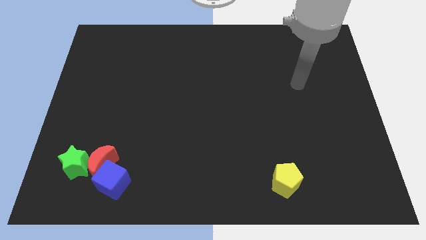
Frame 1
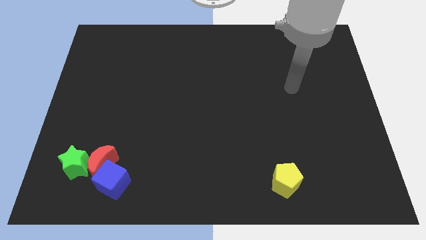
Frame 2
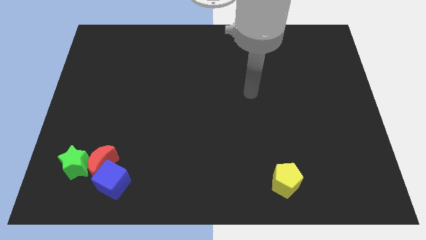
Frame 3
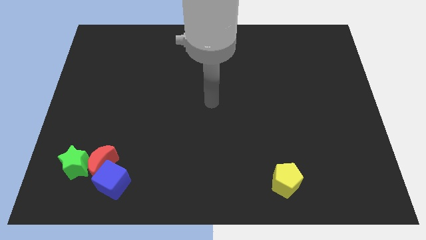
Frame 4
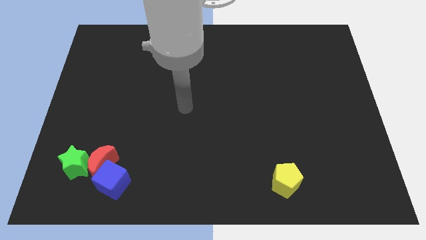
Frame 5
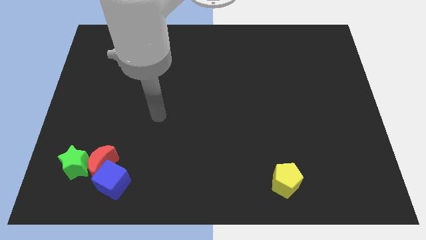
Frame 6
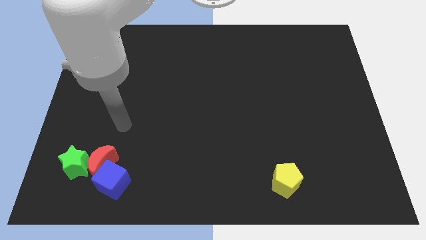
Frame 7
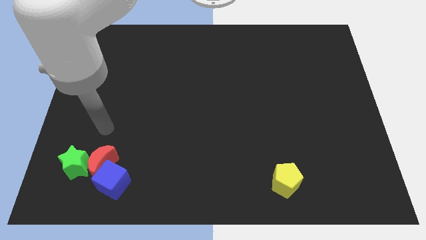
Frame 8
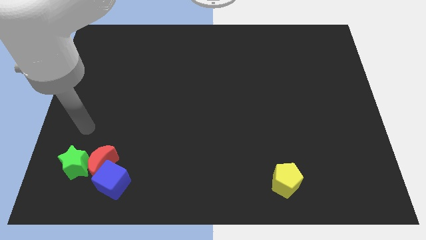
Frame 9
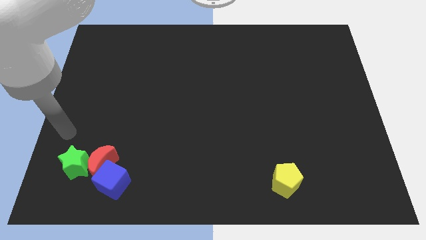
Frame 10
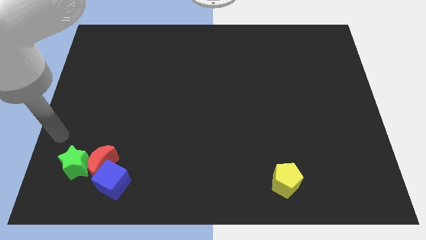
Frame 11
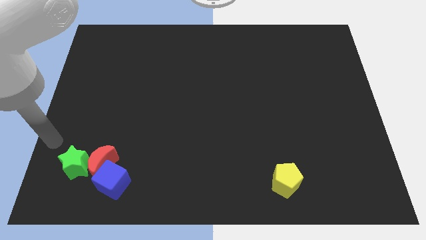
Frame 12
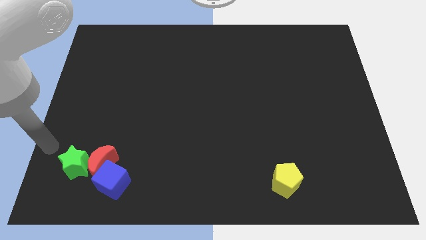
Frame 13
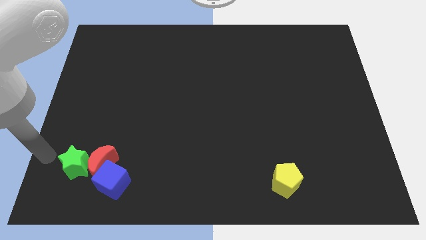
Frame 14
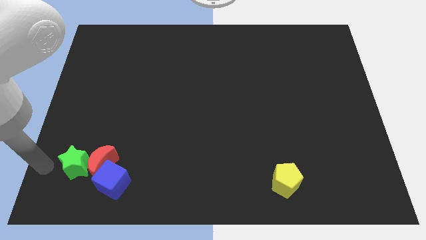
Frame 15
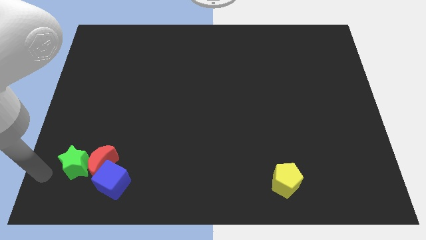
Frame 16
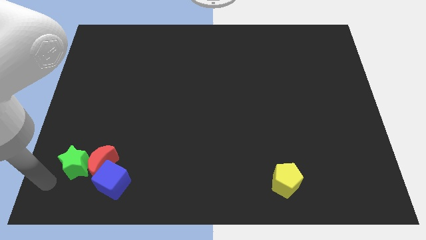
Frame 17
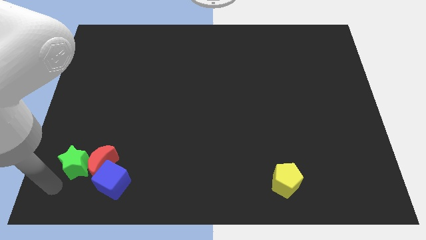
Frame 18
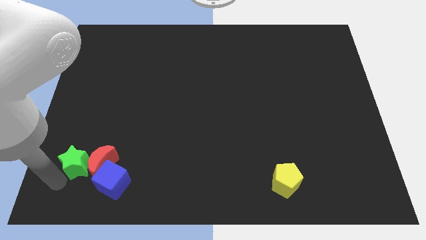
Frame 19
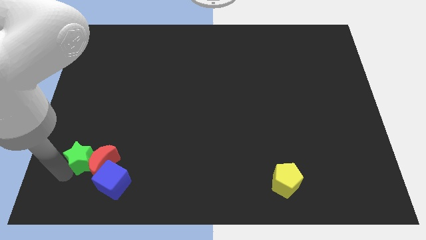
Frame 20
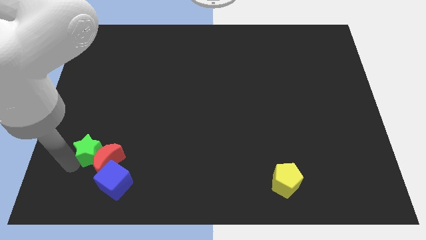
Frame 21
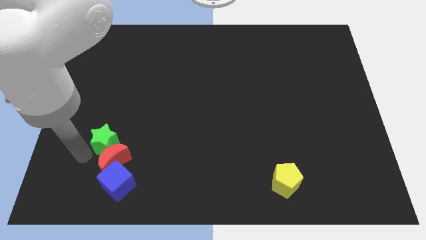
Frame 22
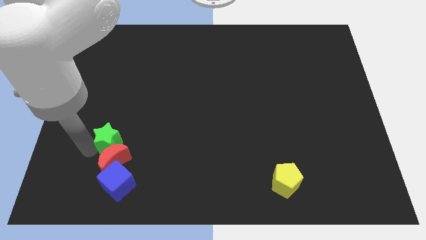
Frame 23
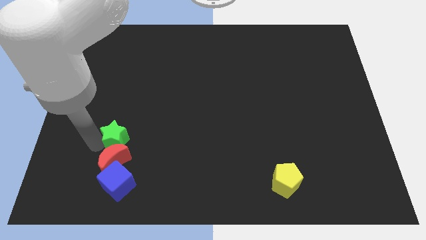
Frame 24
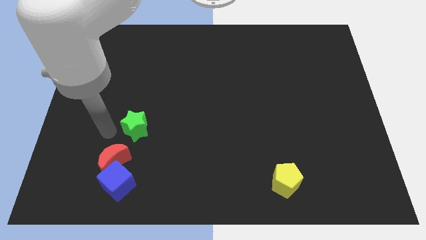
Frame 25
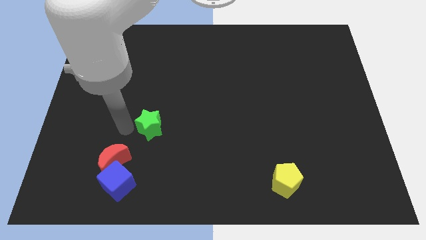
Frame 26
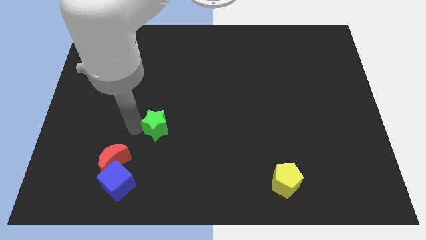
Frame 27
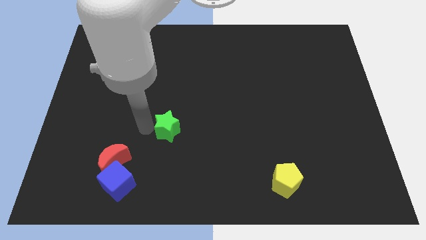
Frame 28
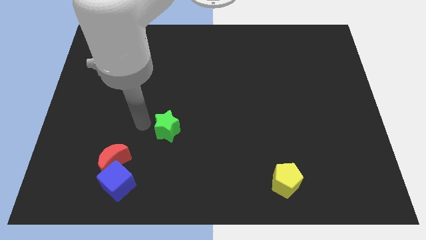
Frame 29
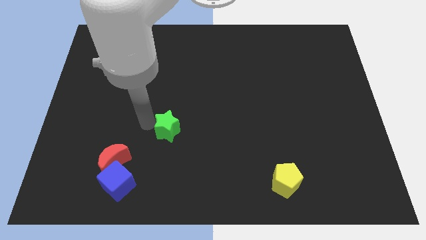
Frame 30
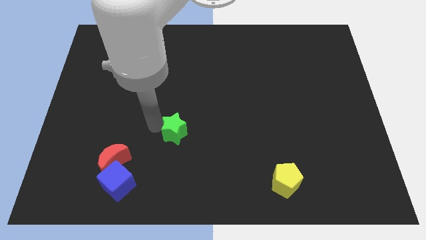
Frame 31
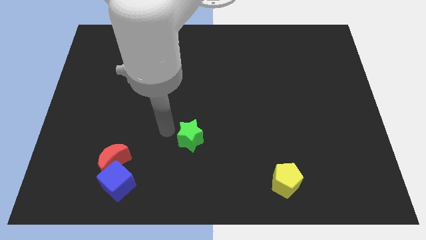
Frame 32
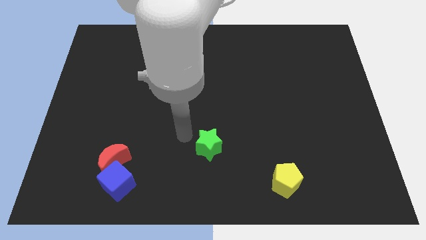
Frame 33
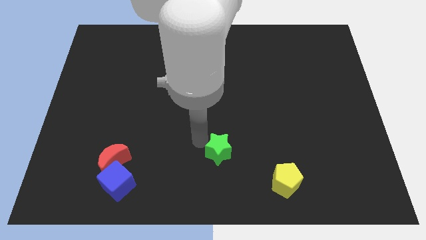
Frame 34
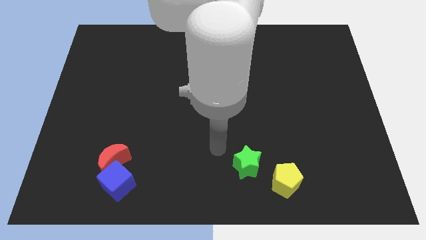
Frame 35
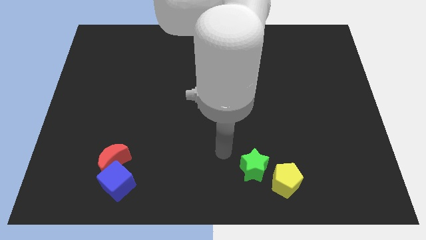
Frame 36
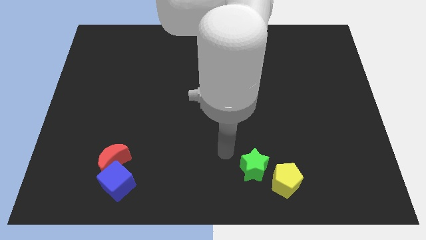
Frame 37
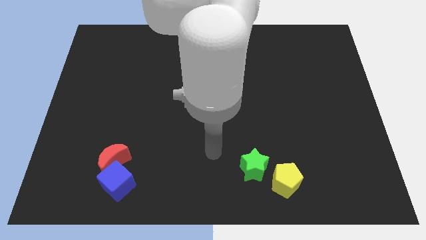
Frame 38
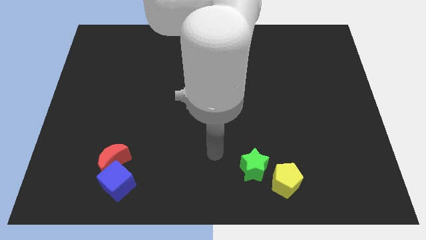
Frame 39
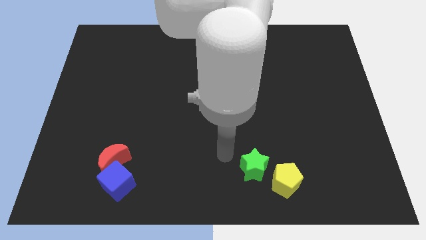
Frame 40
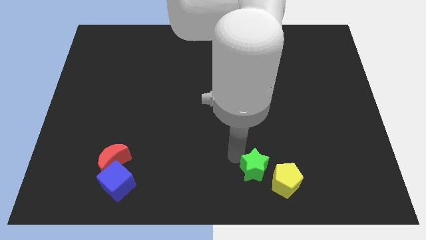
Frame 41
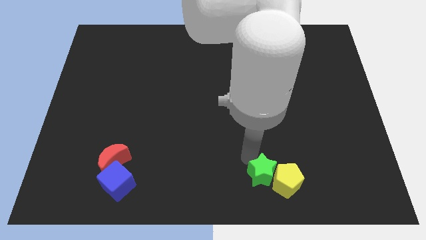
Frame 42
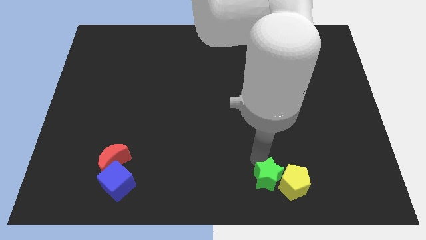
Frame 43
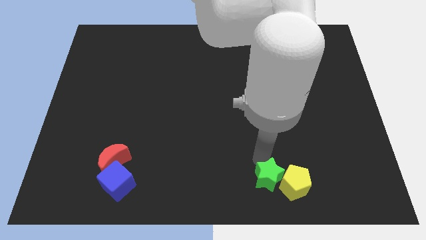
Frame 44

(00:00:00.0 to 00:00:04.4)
move the green star next to the yellow block

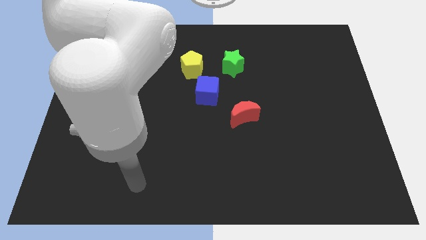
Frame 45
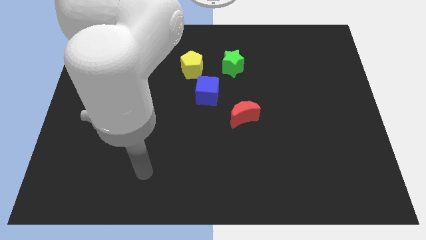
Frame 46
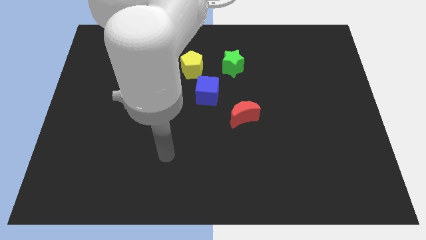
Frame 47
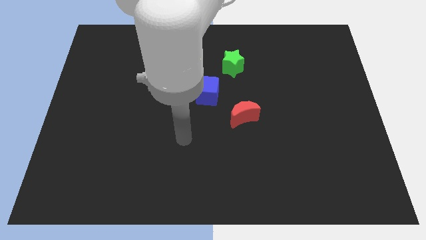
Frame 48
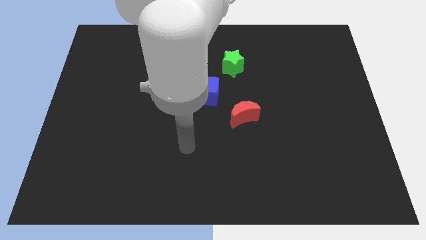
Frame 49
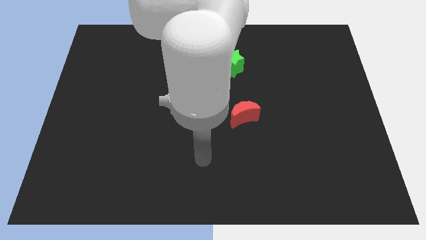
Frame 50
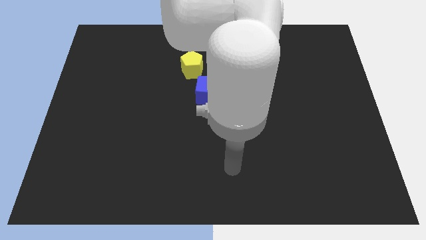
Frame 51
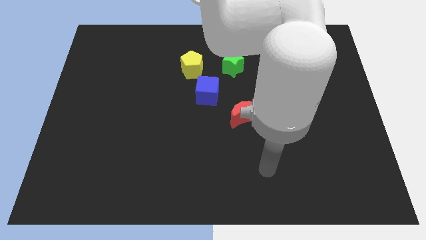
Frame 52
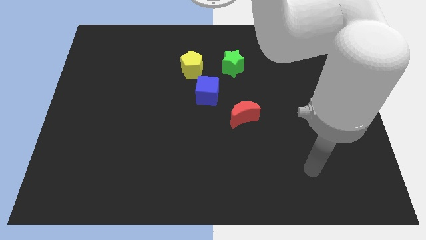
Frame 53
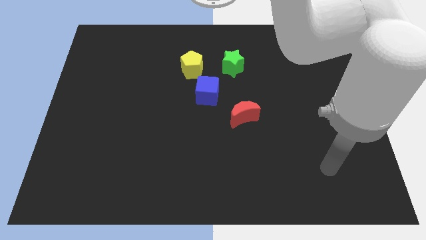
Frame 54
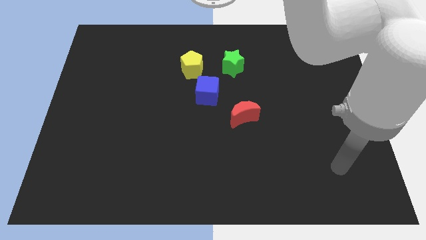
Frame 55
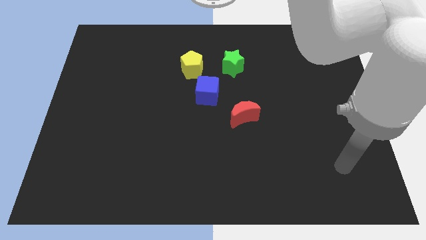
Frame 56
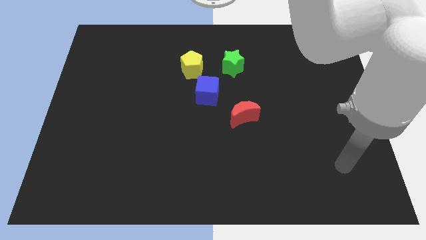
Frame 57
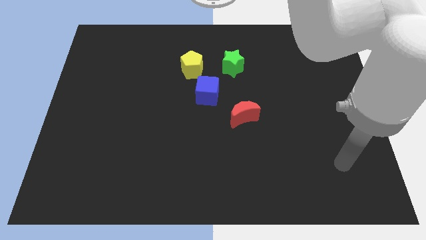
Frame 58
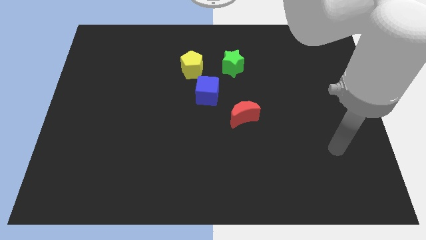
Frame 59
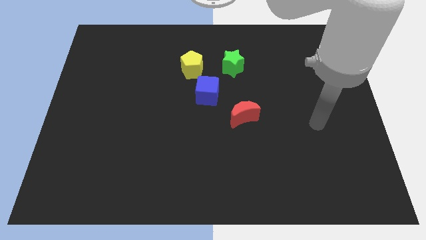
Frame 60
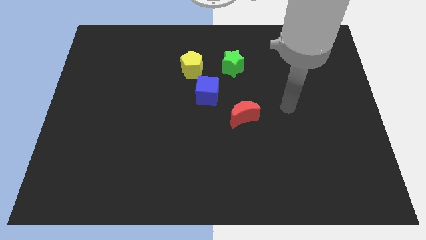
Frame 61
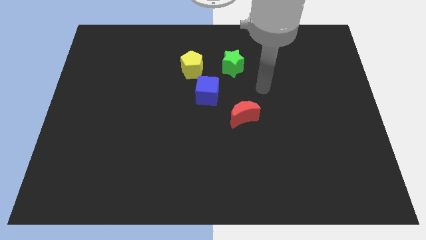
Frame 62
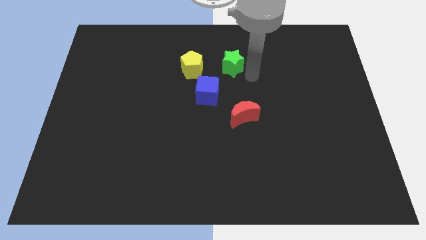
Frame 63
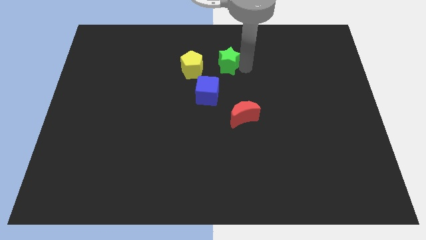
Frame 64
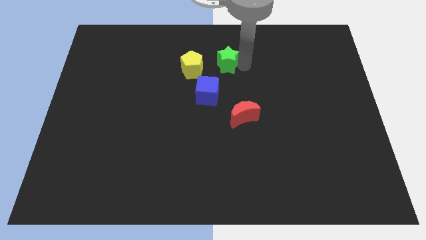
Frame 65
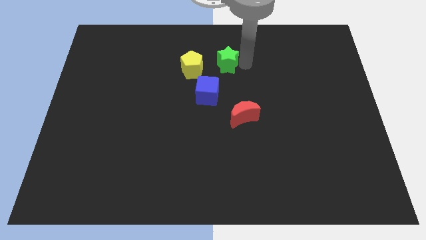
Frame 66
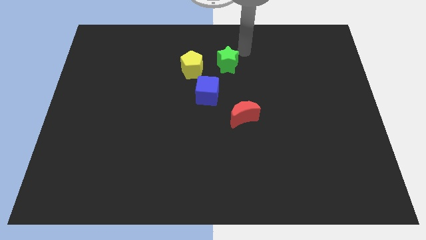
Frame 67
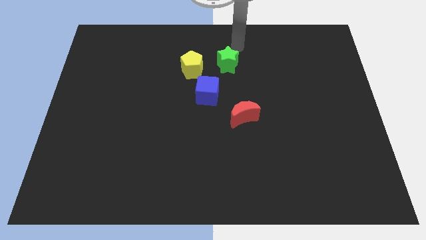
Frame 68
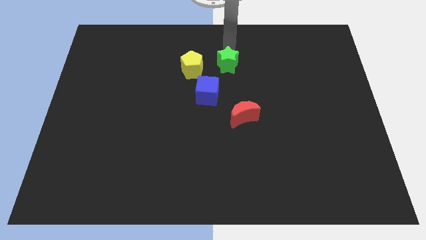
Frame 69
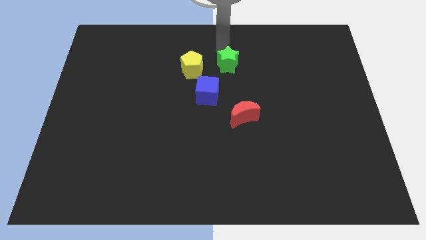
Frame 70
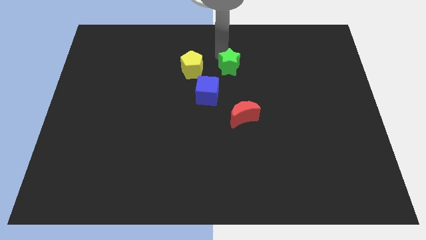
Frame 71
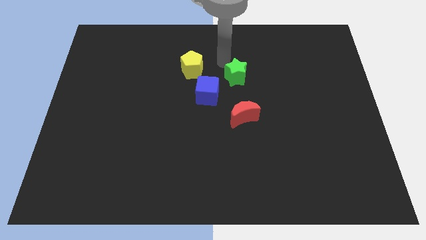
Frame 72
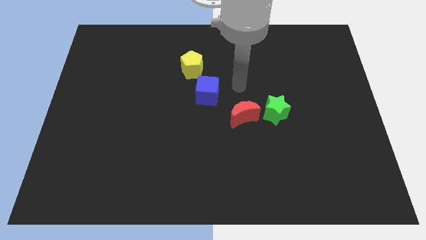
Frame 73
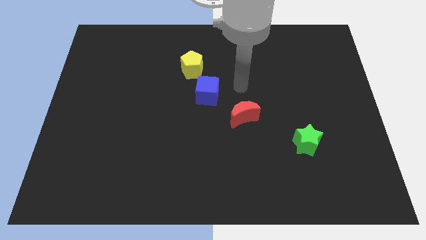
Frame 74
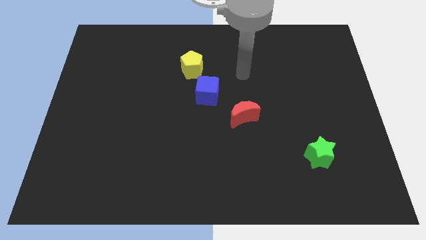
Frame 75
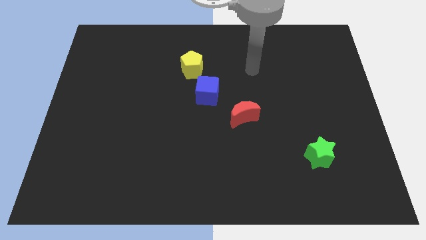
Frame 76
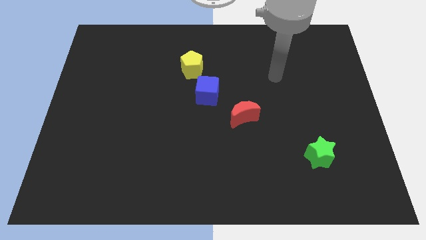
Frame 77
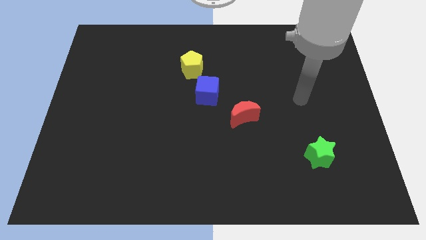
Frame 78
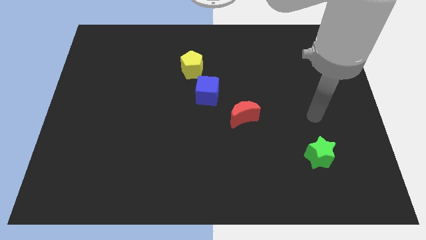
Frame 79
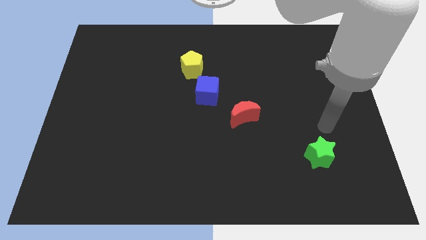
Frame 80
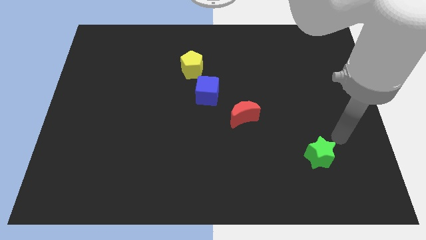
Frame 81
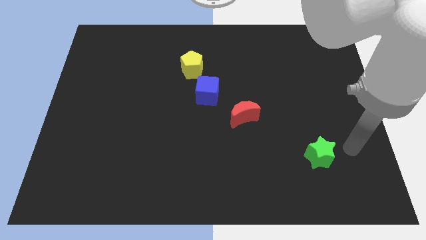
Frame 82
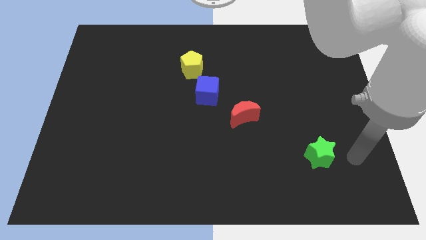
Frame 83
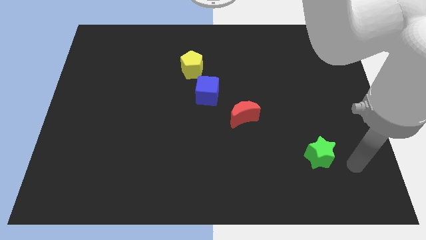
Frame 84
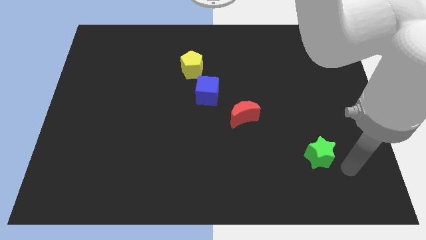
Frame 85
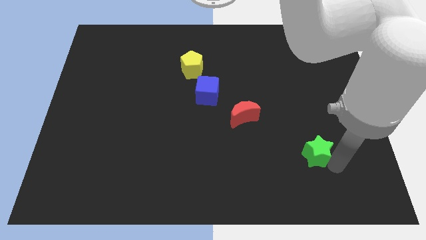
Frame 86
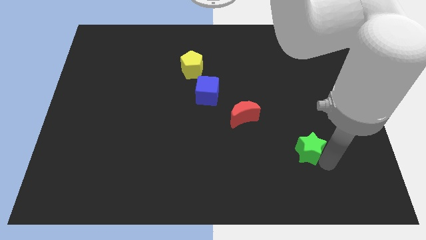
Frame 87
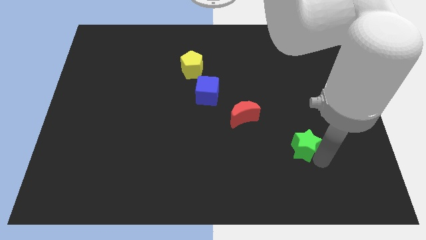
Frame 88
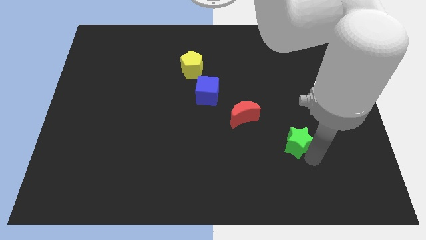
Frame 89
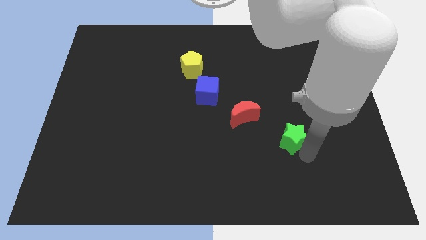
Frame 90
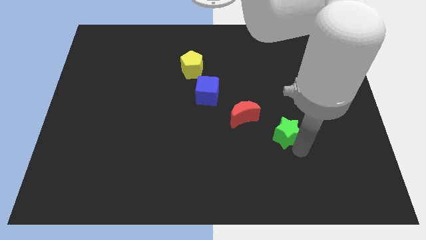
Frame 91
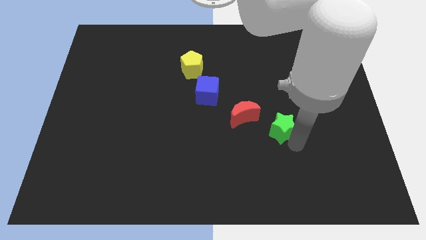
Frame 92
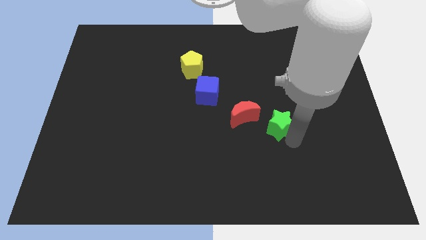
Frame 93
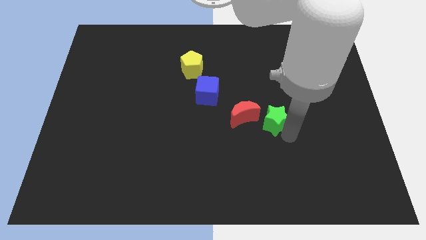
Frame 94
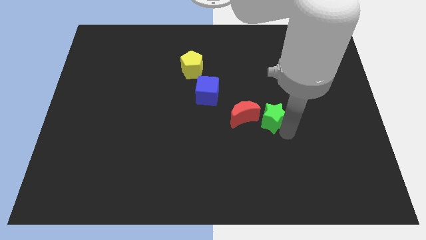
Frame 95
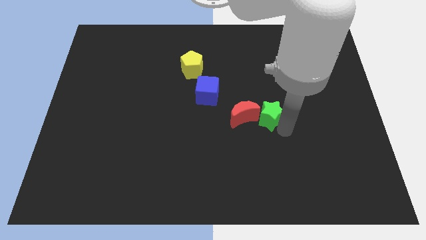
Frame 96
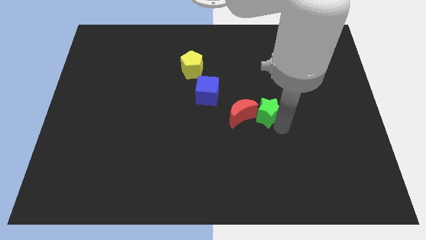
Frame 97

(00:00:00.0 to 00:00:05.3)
move the star close to the red moon
